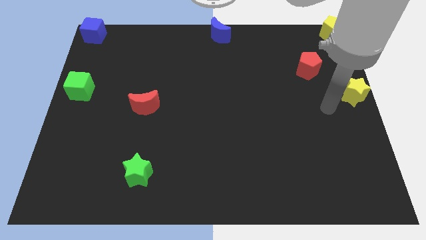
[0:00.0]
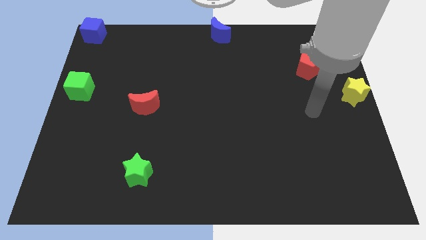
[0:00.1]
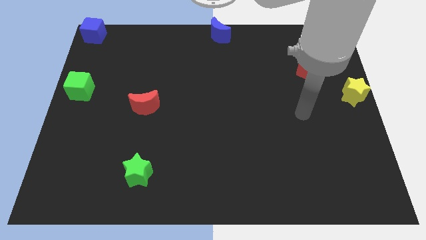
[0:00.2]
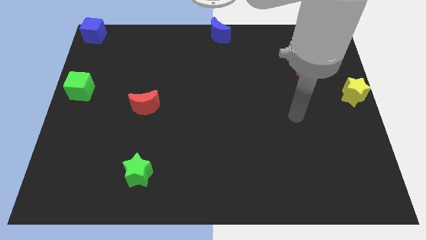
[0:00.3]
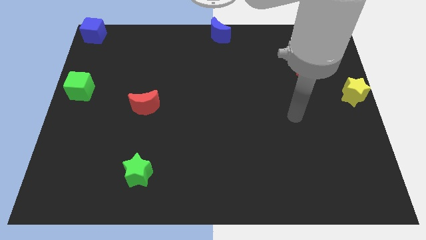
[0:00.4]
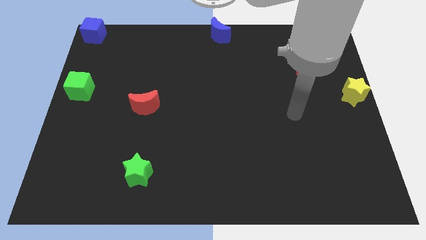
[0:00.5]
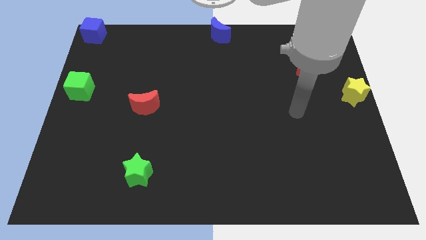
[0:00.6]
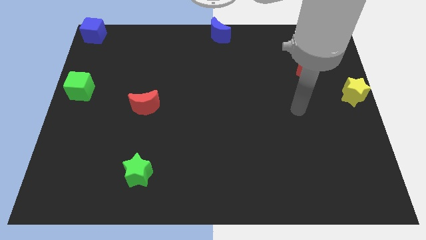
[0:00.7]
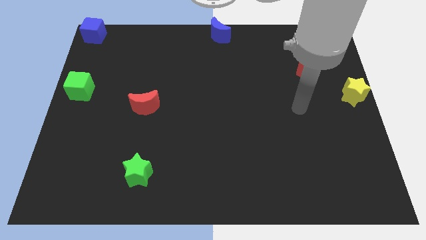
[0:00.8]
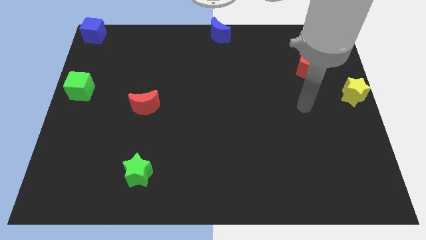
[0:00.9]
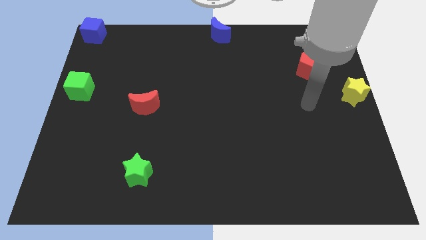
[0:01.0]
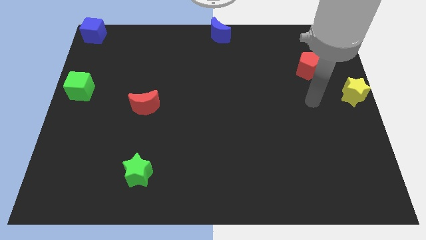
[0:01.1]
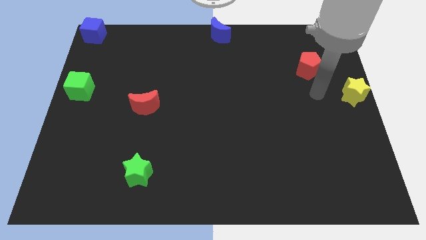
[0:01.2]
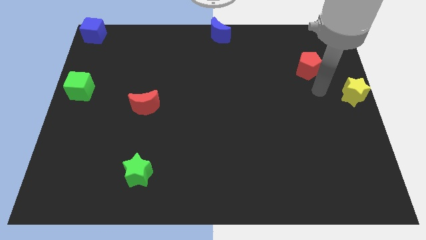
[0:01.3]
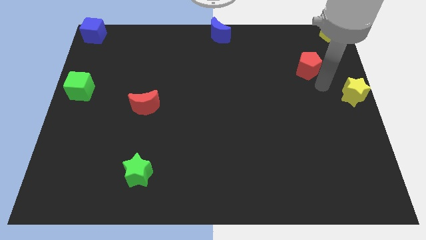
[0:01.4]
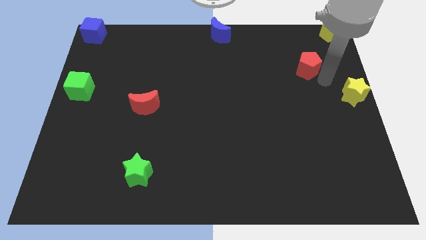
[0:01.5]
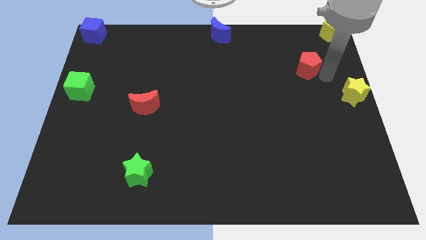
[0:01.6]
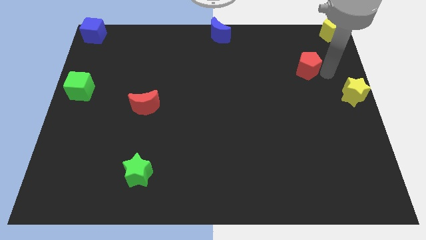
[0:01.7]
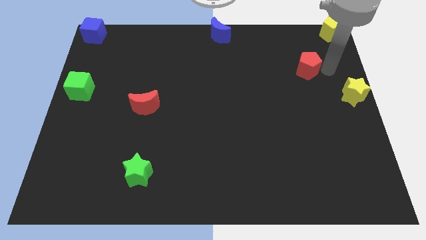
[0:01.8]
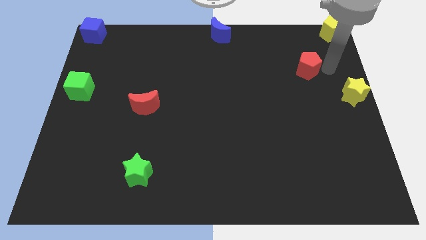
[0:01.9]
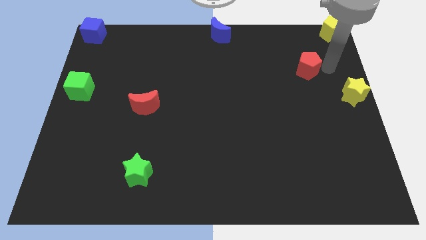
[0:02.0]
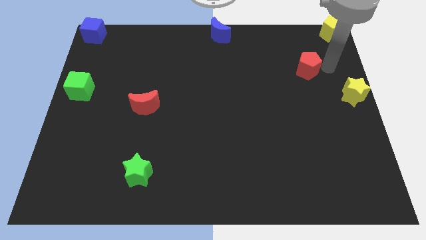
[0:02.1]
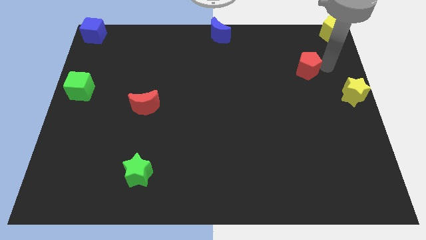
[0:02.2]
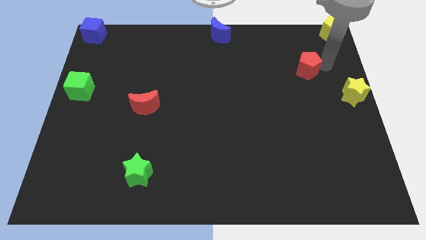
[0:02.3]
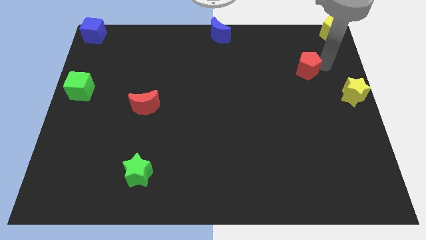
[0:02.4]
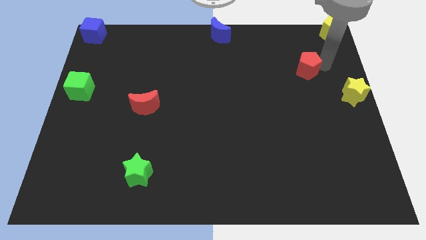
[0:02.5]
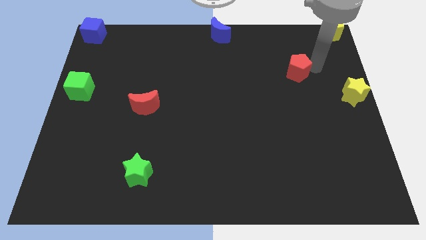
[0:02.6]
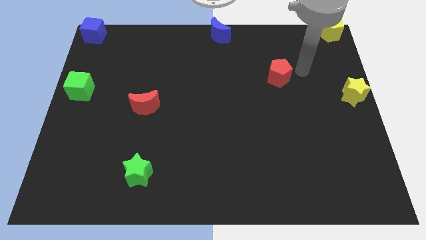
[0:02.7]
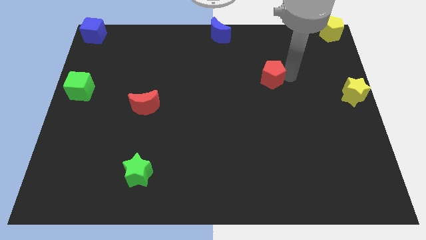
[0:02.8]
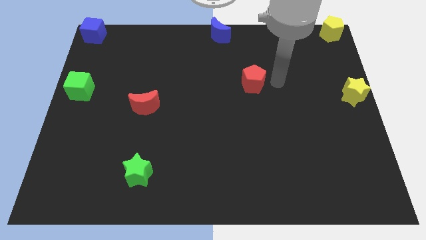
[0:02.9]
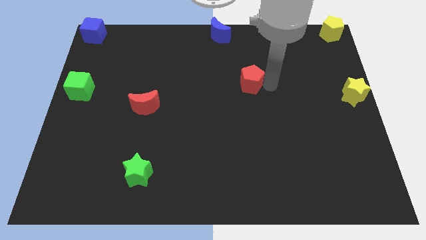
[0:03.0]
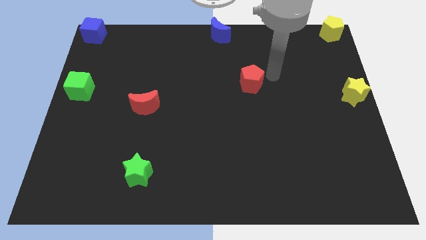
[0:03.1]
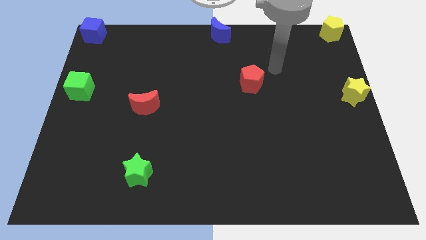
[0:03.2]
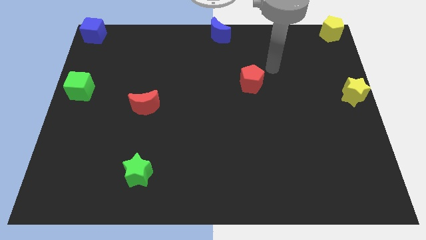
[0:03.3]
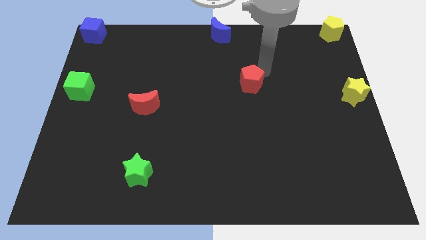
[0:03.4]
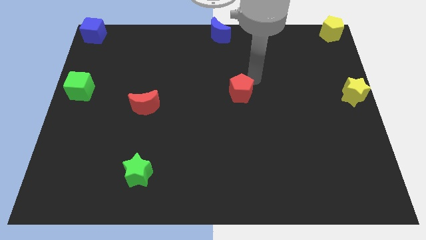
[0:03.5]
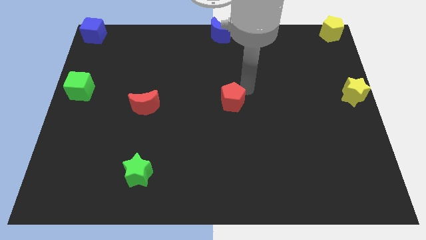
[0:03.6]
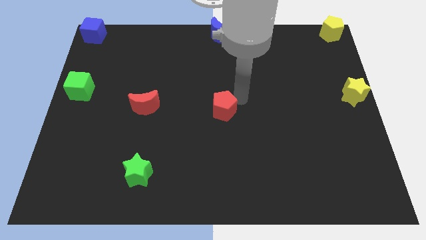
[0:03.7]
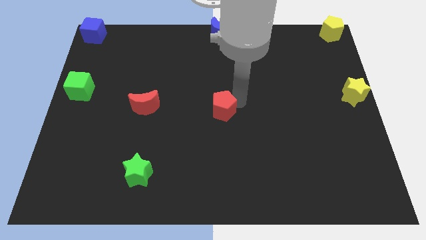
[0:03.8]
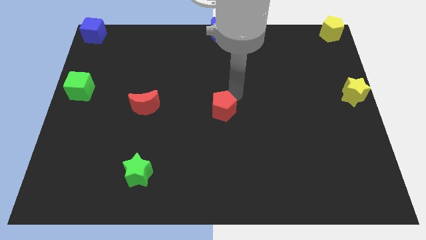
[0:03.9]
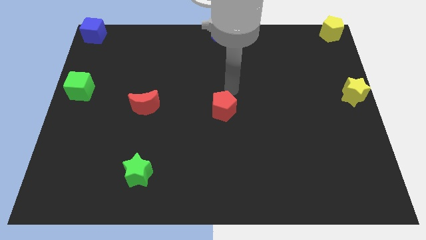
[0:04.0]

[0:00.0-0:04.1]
push the red pentagon to the center of the board

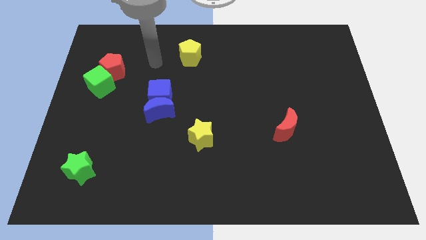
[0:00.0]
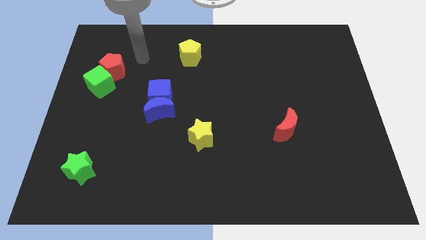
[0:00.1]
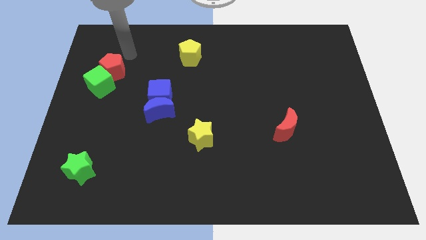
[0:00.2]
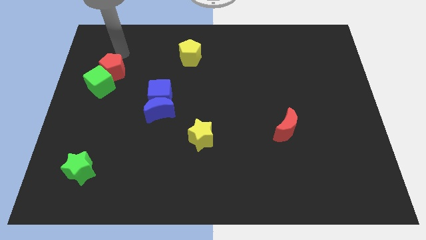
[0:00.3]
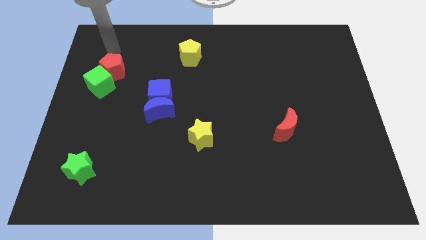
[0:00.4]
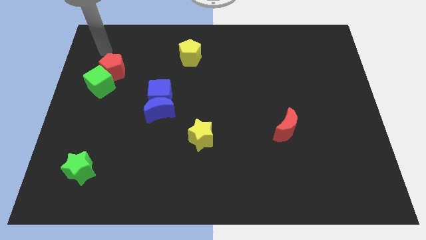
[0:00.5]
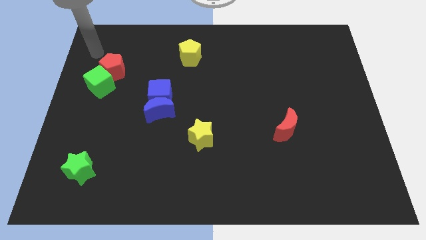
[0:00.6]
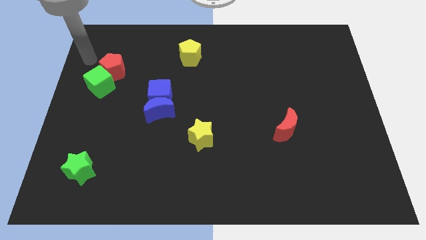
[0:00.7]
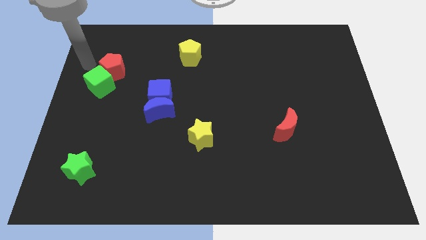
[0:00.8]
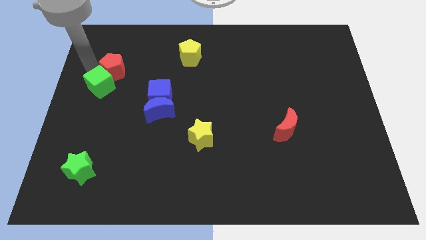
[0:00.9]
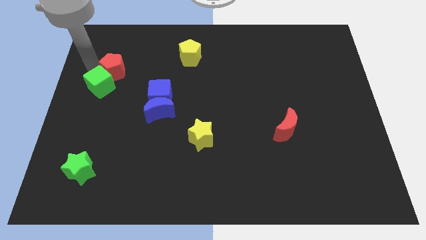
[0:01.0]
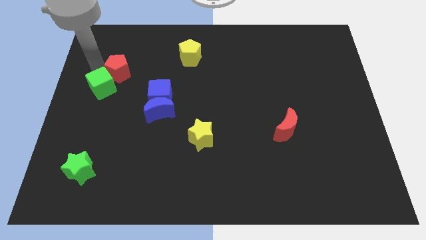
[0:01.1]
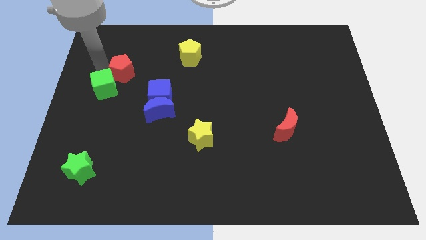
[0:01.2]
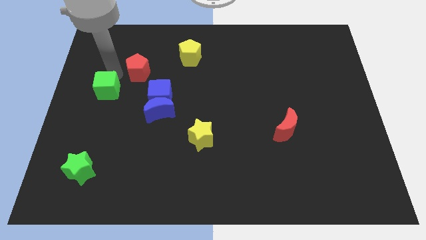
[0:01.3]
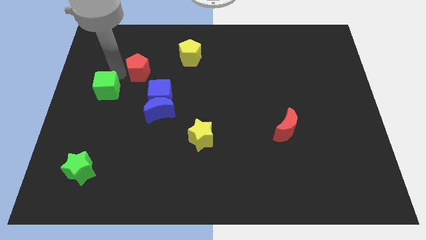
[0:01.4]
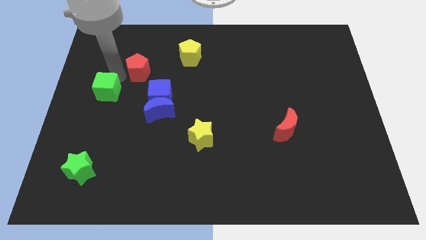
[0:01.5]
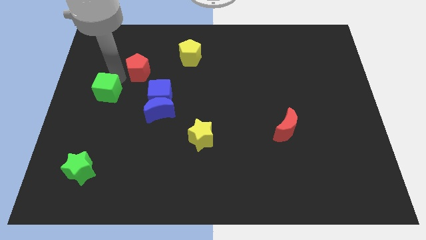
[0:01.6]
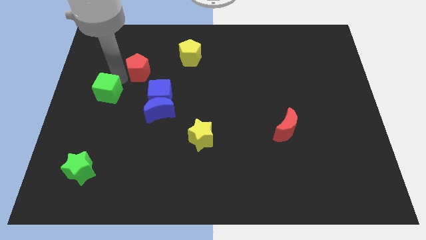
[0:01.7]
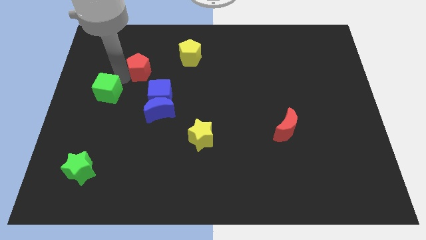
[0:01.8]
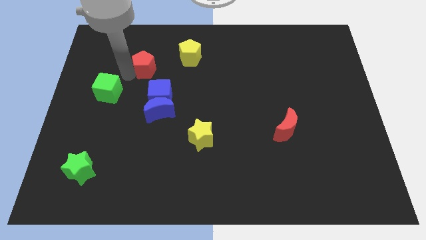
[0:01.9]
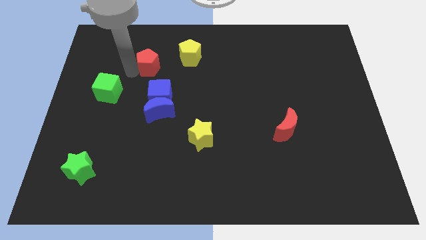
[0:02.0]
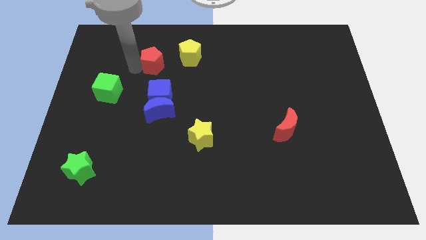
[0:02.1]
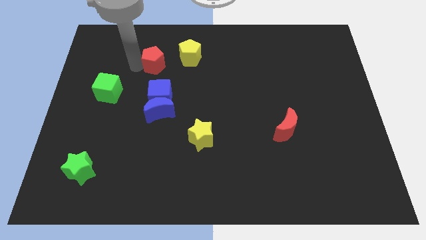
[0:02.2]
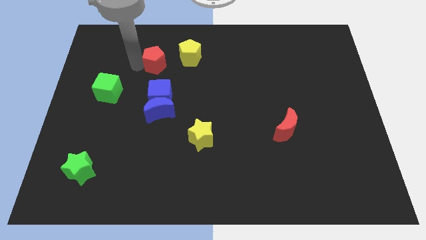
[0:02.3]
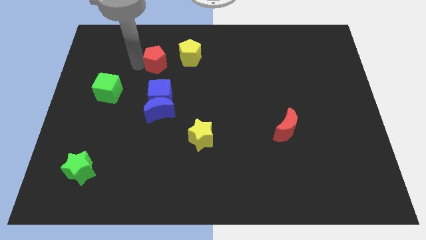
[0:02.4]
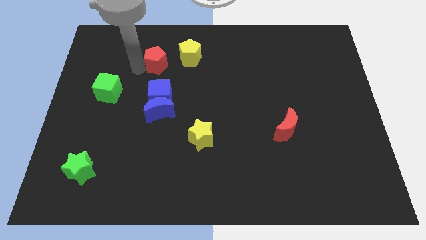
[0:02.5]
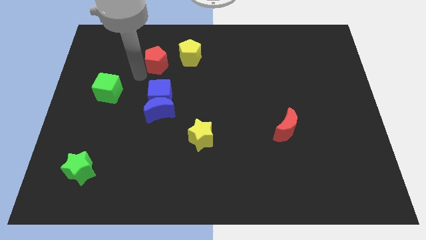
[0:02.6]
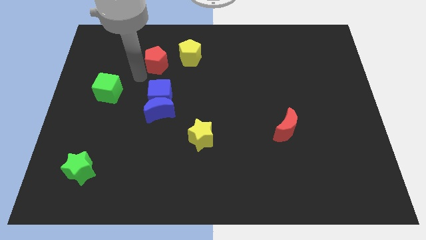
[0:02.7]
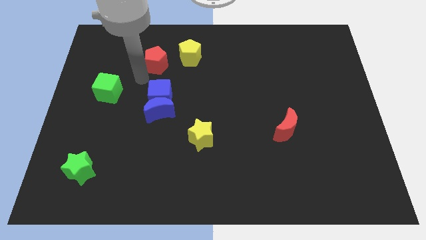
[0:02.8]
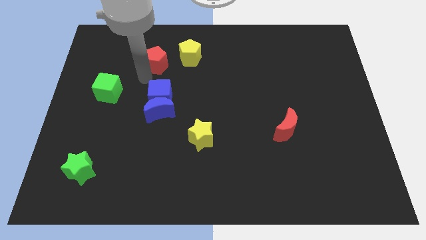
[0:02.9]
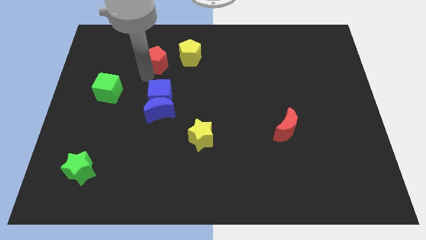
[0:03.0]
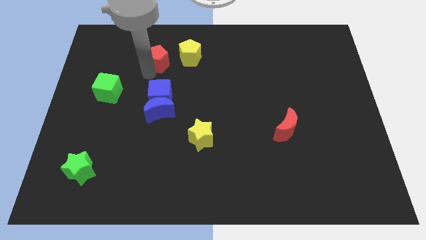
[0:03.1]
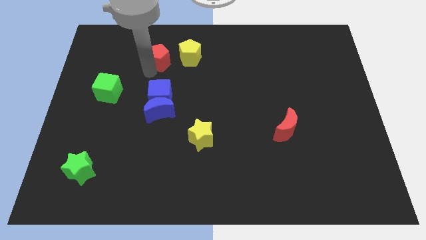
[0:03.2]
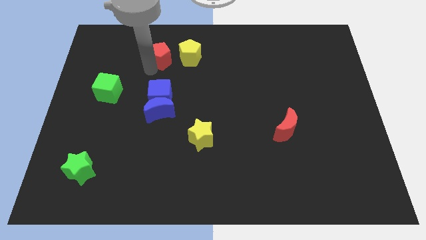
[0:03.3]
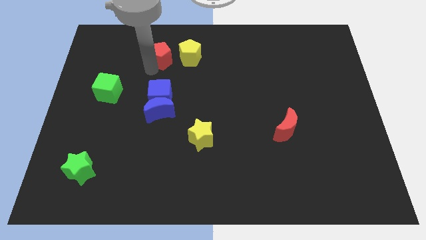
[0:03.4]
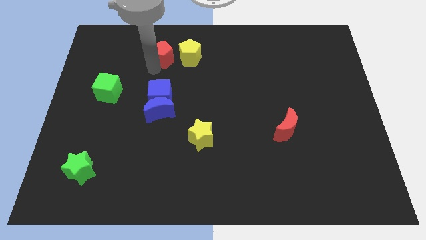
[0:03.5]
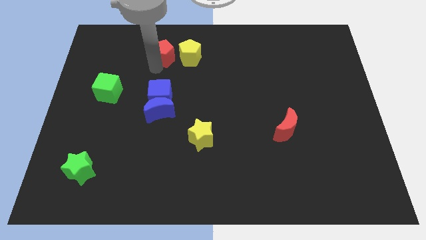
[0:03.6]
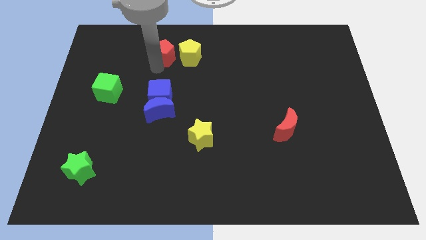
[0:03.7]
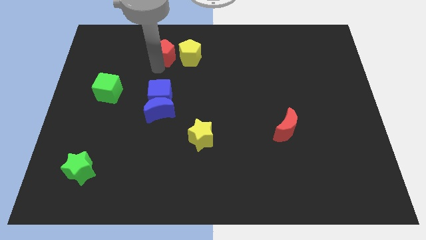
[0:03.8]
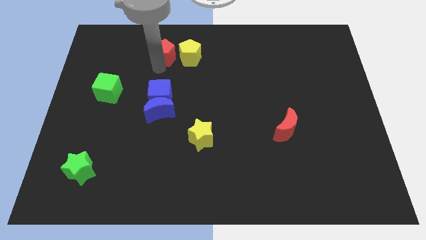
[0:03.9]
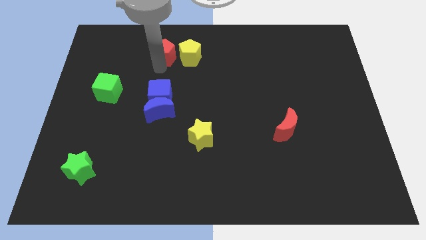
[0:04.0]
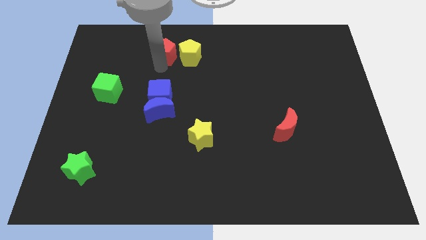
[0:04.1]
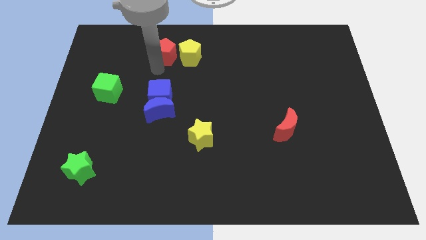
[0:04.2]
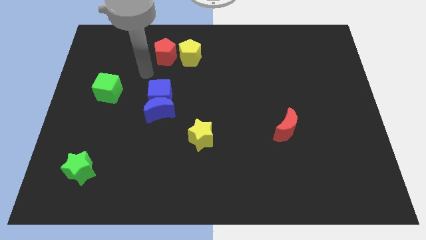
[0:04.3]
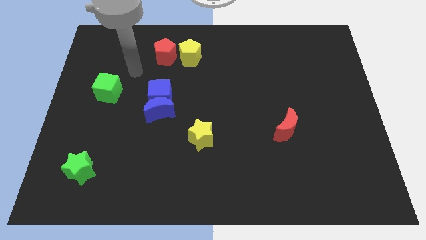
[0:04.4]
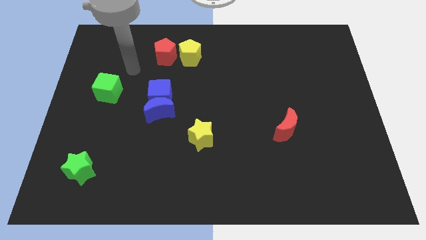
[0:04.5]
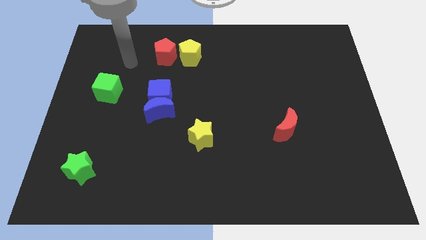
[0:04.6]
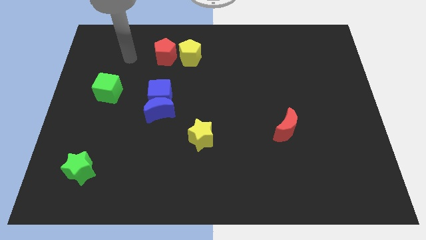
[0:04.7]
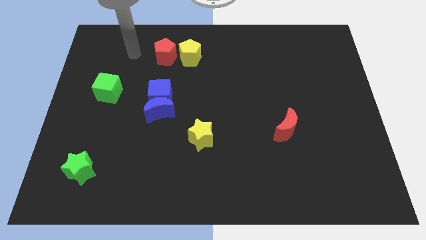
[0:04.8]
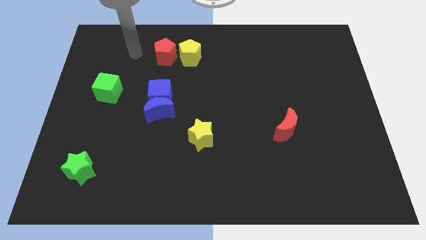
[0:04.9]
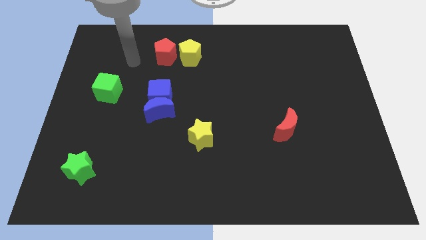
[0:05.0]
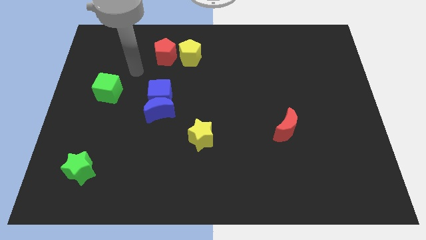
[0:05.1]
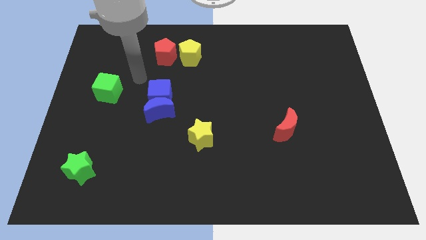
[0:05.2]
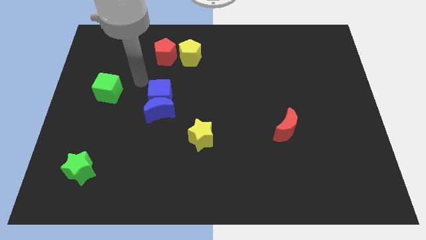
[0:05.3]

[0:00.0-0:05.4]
separate the red pentagon from the green cube
